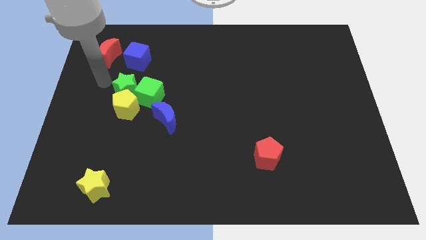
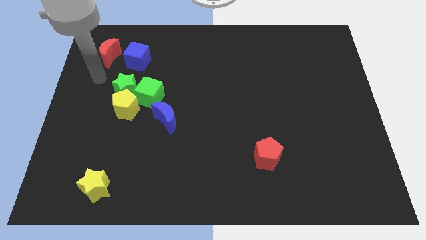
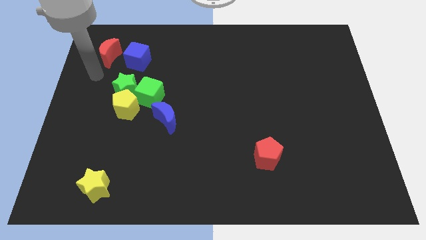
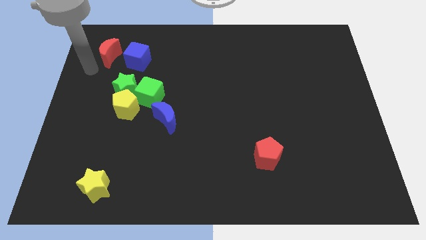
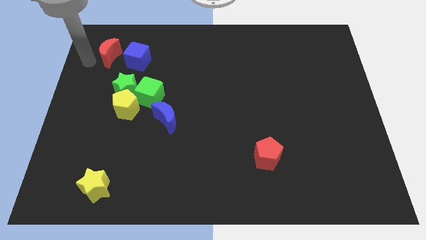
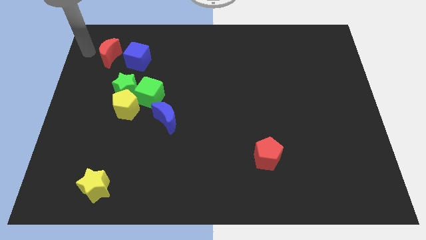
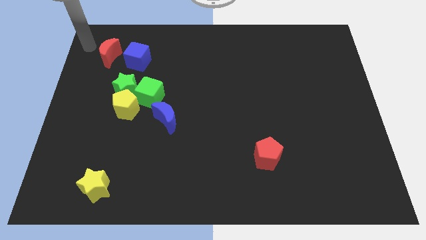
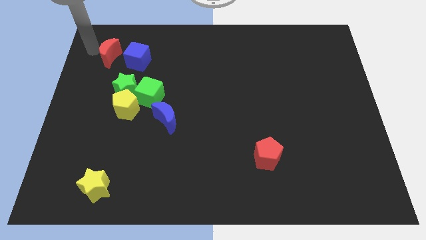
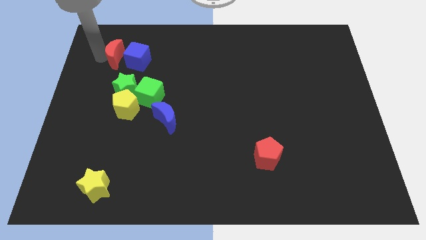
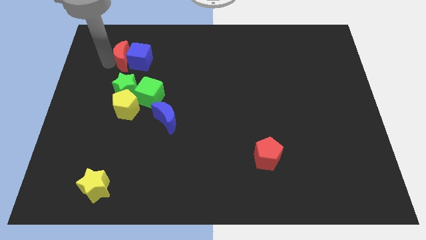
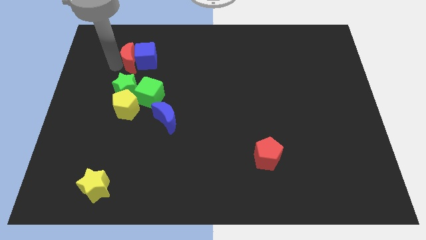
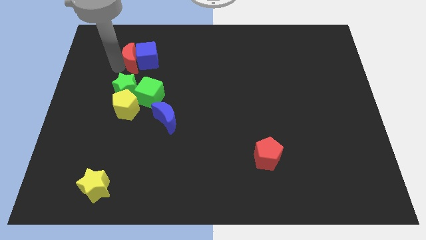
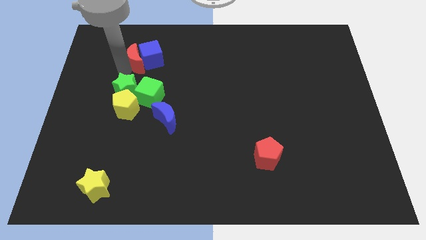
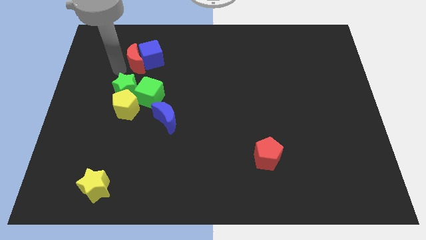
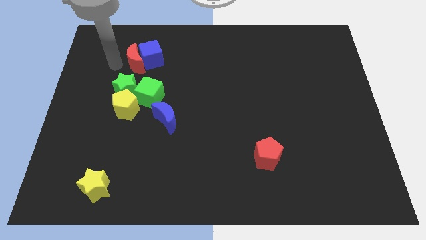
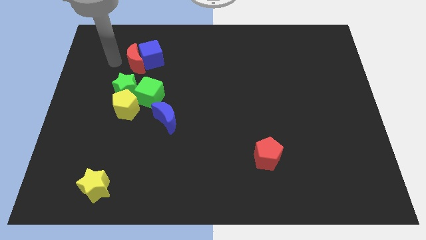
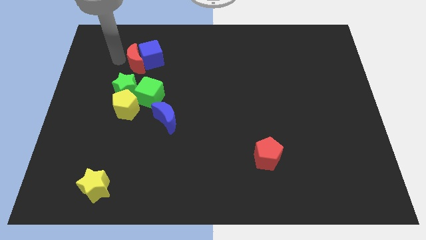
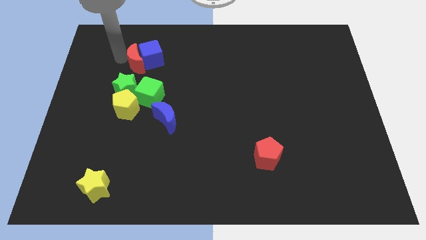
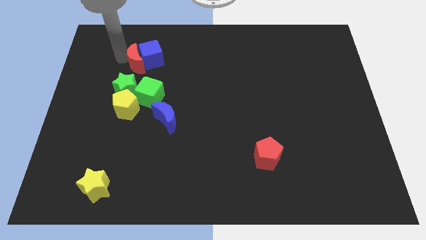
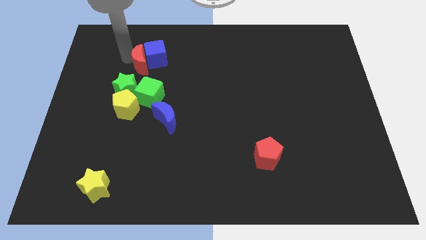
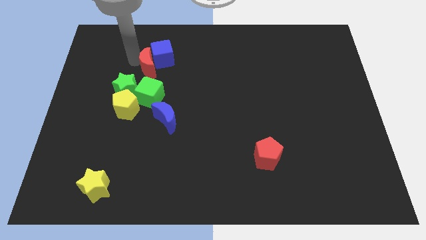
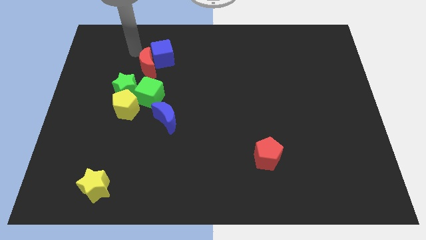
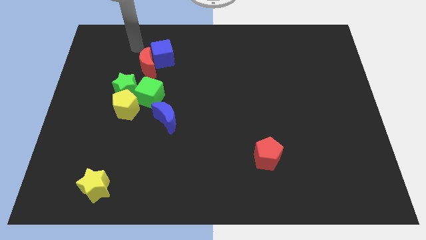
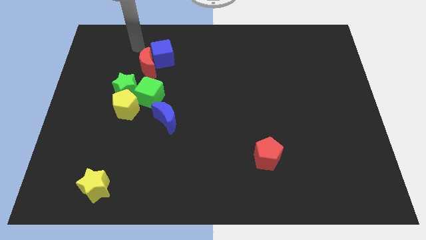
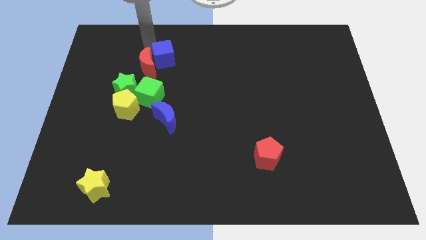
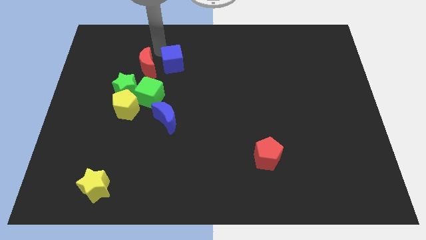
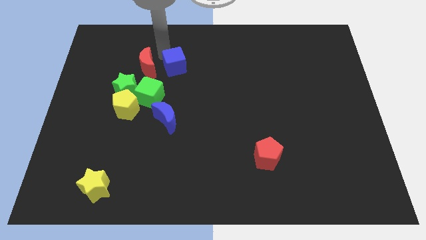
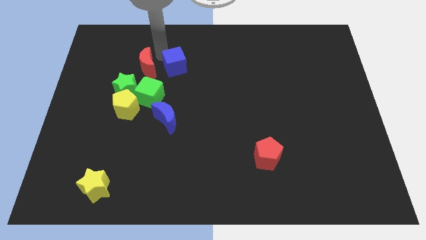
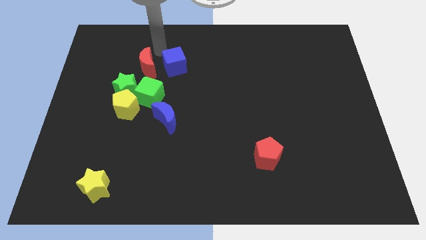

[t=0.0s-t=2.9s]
slide the red moon and the blue cube to the right

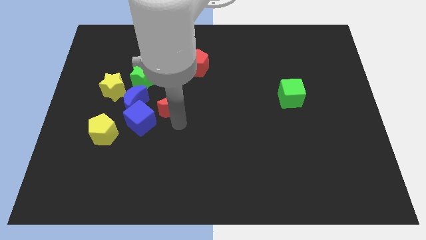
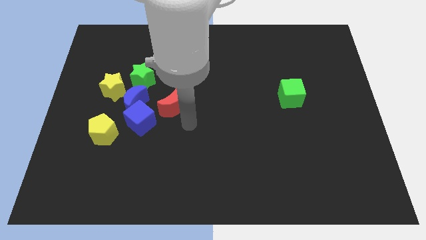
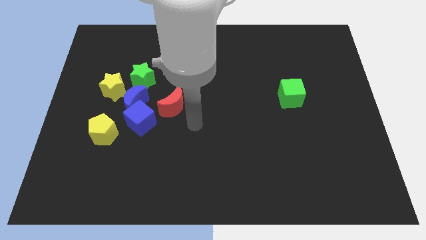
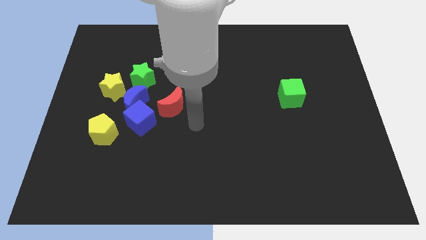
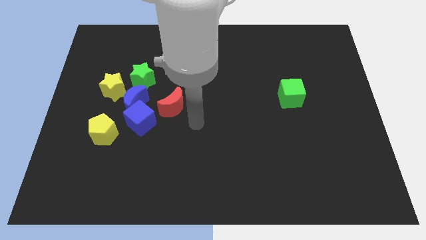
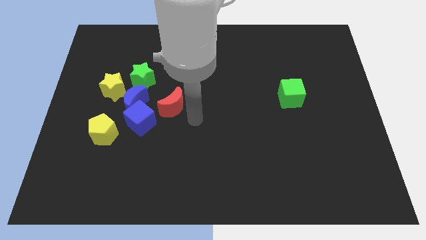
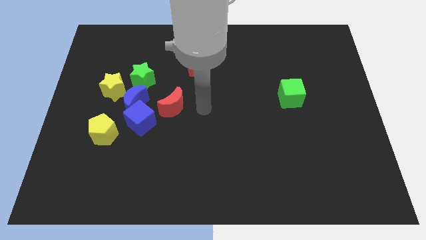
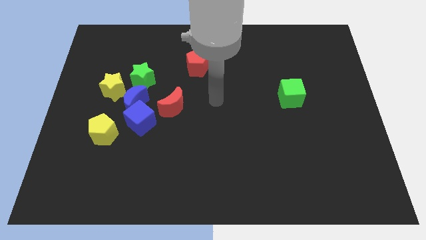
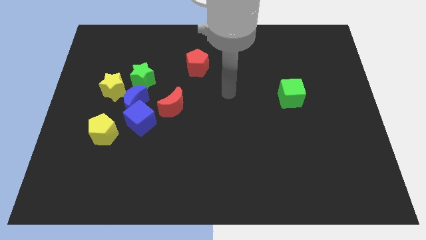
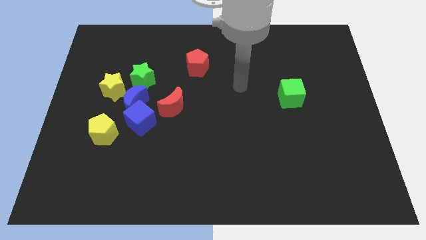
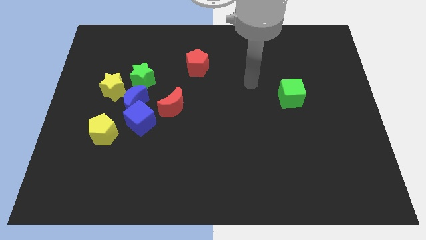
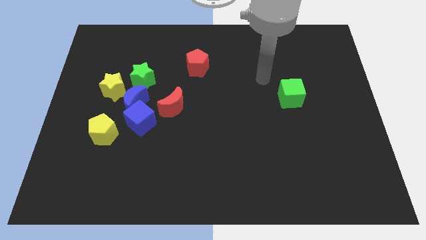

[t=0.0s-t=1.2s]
slide your arm away from red moon

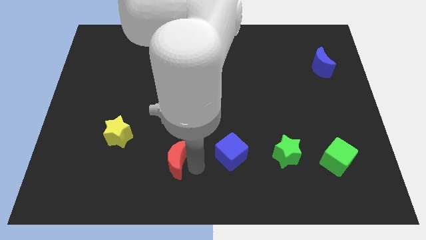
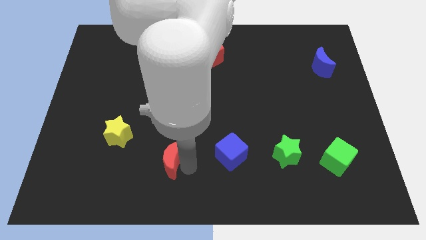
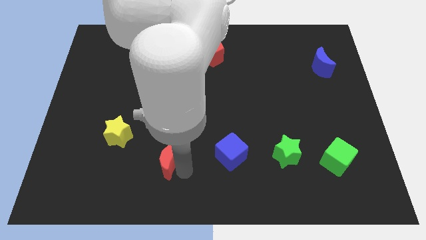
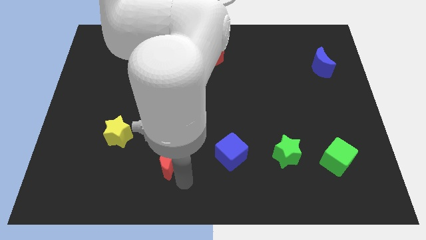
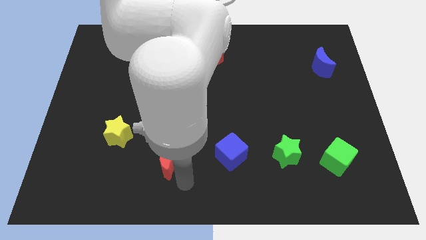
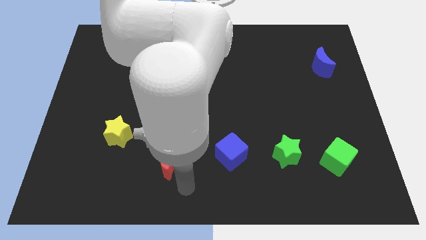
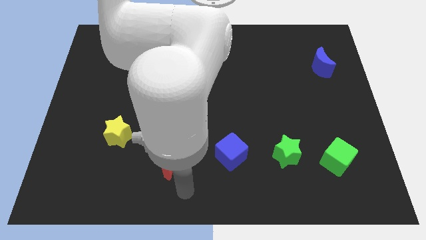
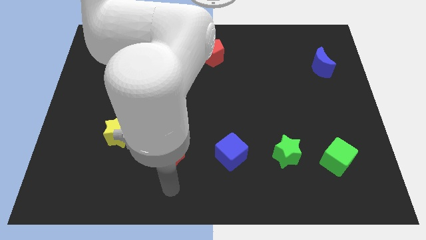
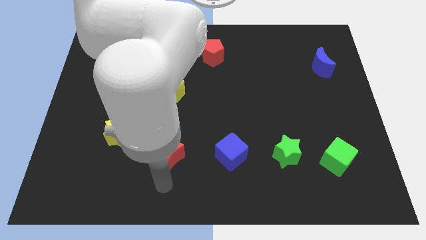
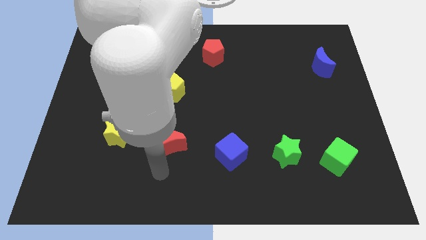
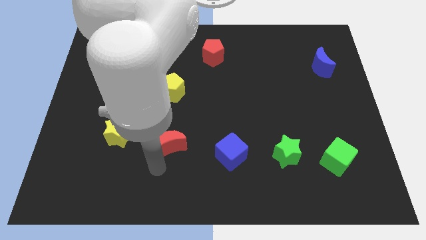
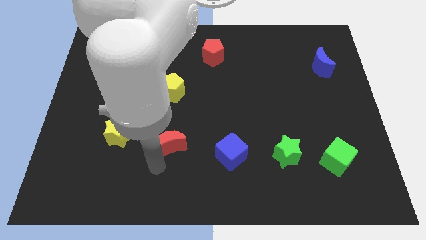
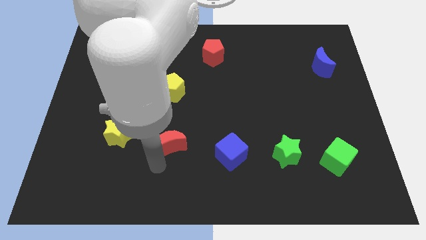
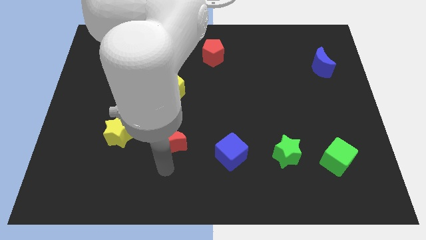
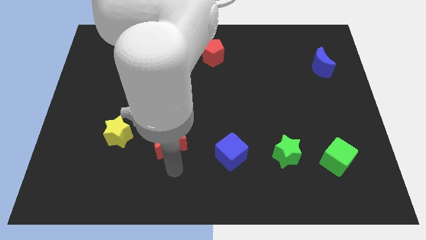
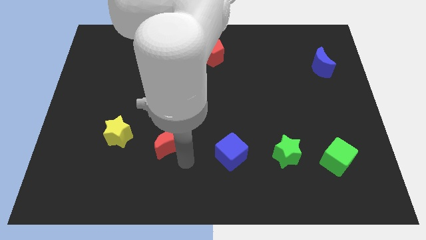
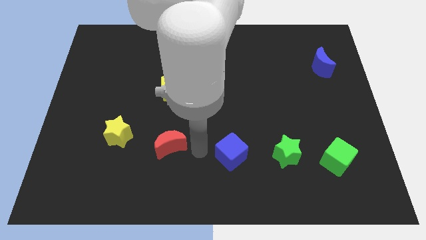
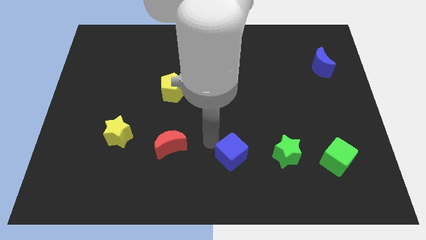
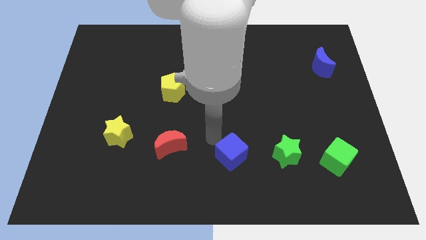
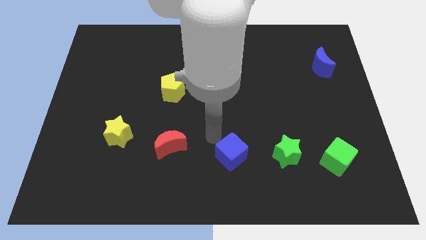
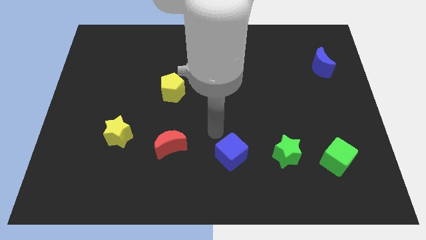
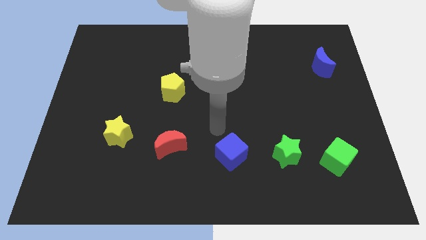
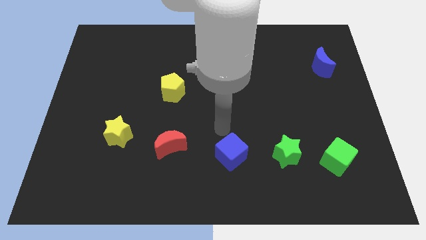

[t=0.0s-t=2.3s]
place the red crescent to the right of the yellow star

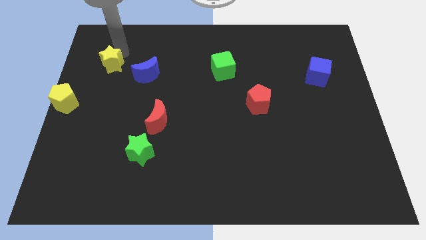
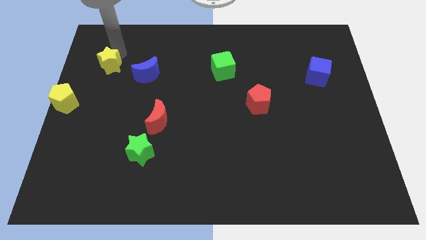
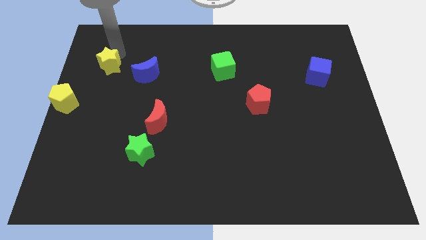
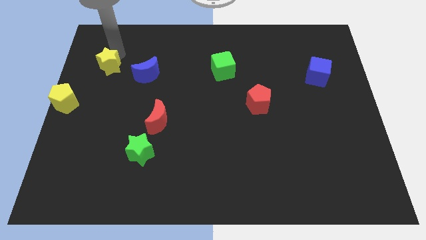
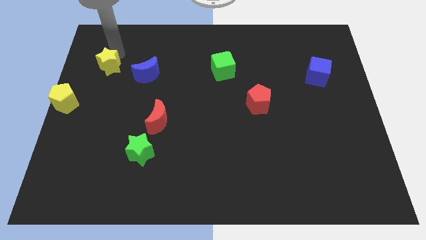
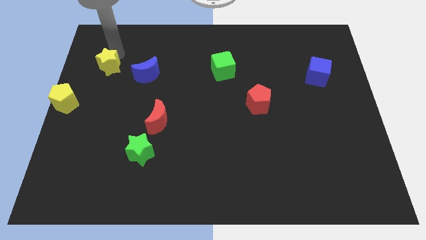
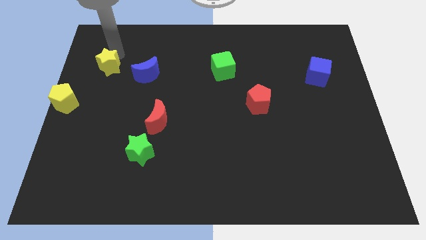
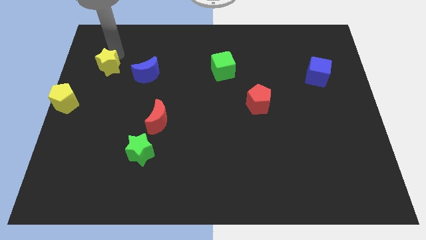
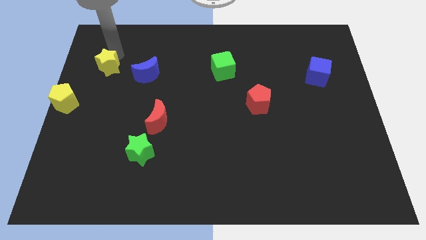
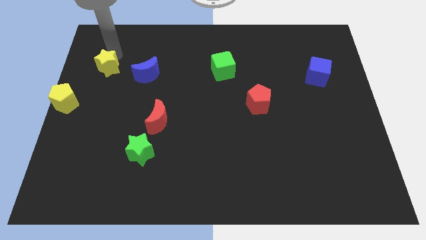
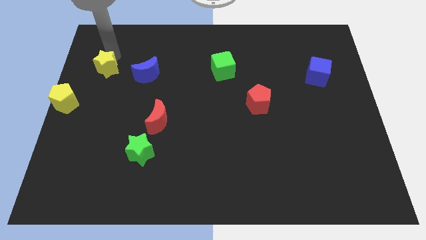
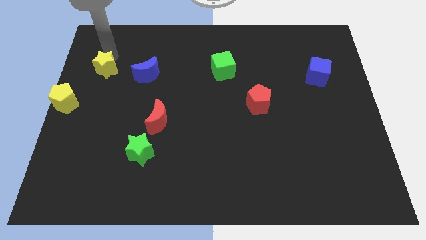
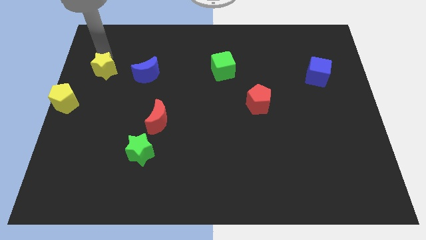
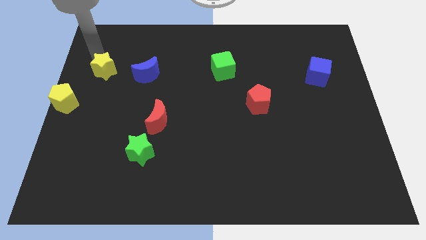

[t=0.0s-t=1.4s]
place the yellow star parallel left to the blue moon

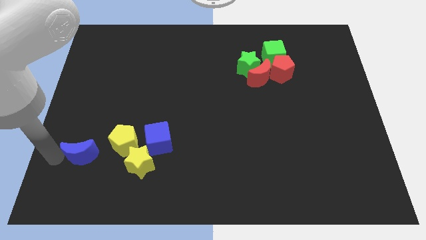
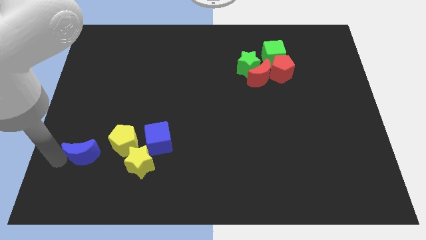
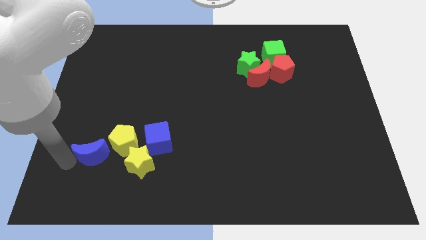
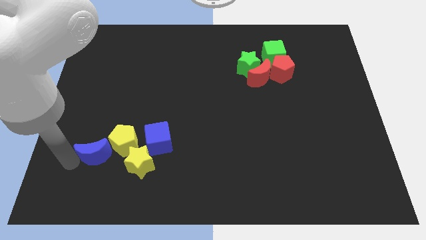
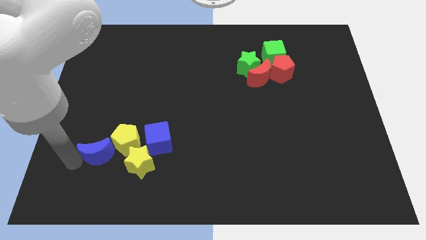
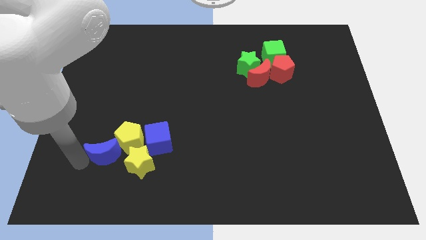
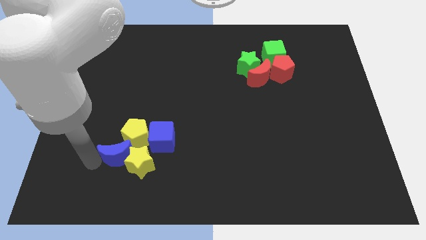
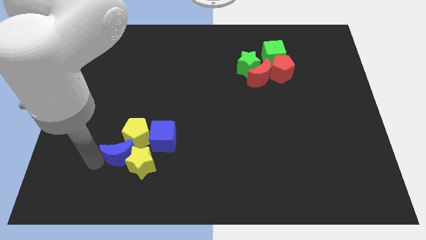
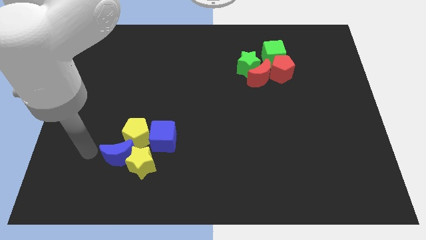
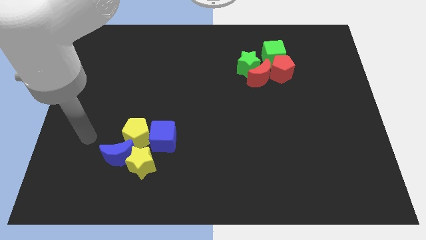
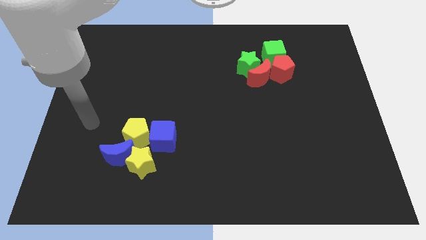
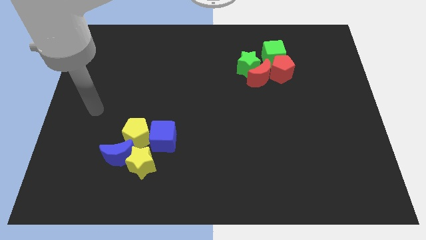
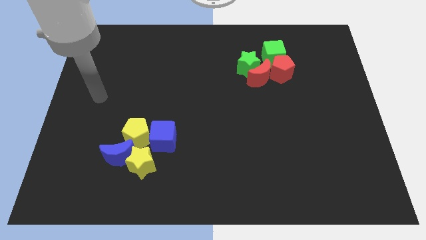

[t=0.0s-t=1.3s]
push the yellow pentagon using the blue crescent
